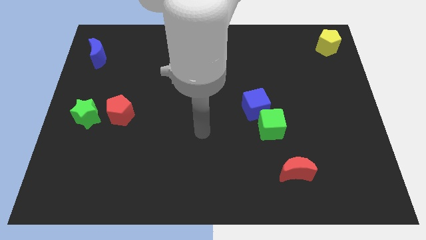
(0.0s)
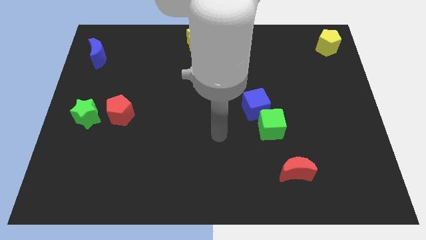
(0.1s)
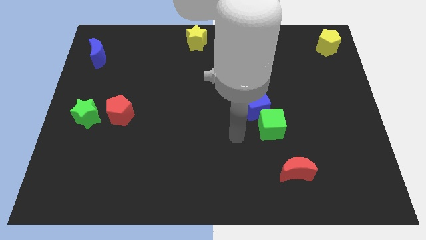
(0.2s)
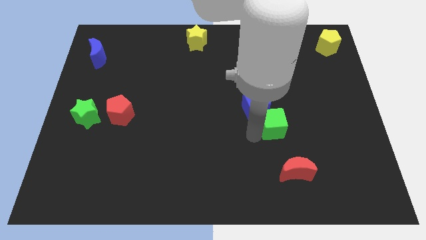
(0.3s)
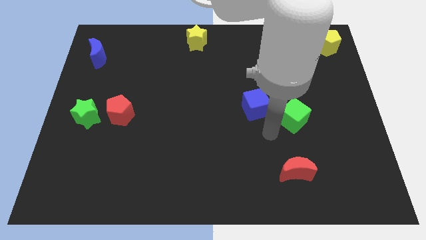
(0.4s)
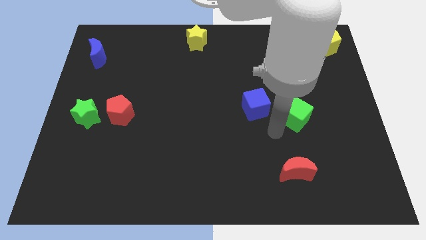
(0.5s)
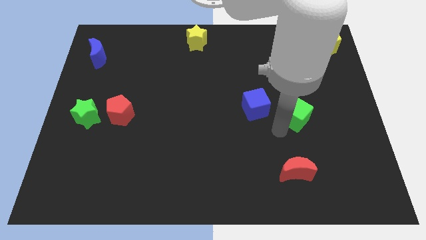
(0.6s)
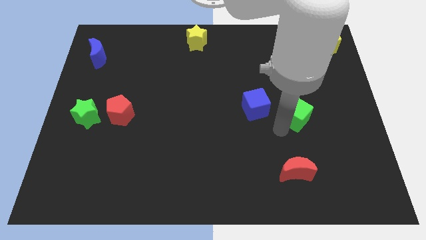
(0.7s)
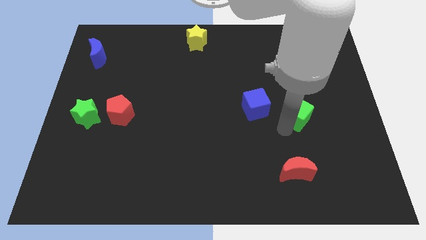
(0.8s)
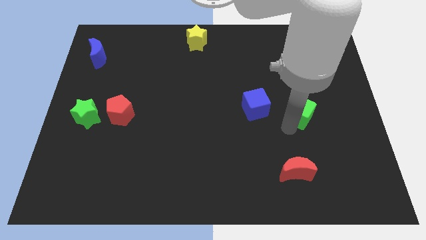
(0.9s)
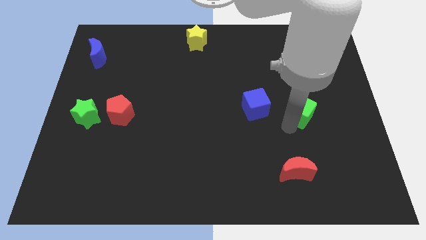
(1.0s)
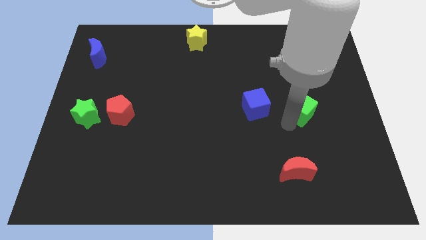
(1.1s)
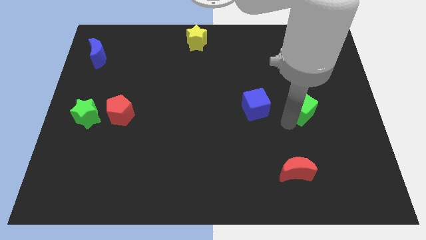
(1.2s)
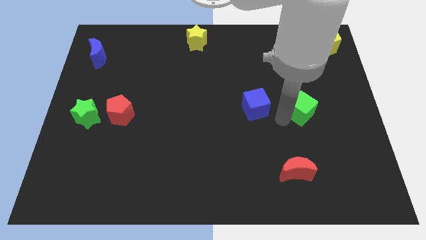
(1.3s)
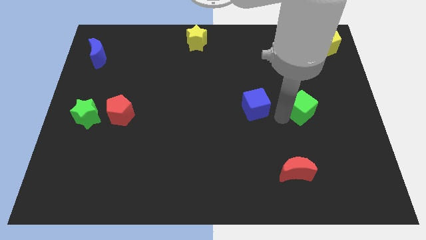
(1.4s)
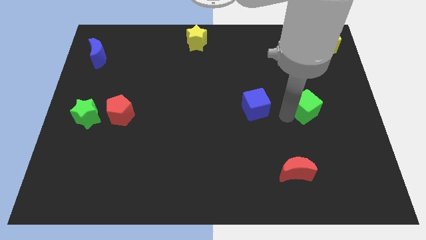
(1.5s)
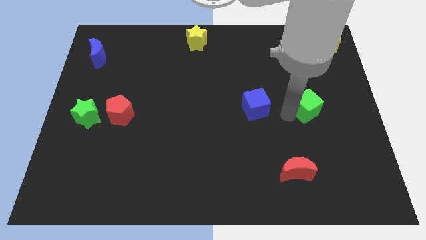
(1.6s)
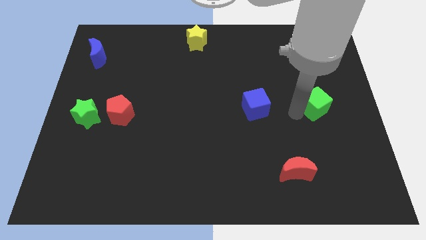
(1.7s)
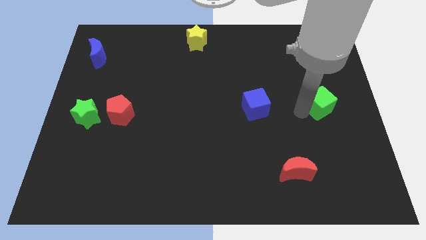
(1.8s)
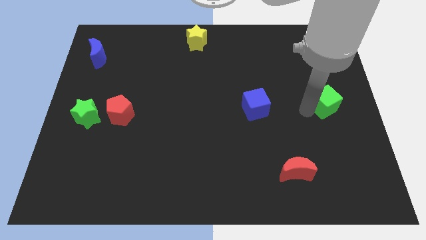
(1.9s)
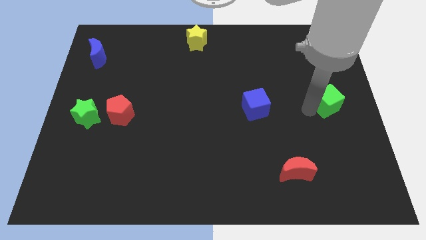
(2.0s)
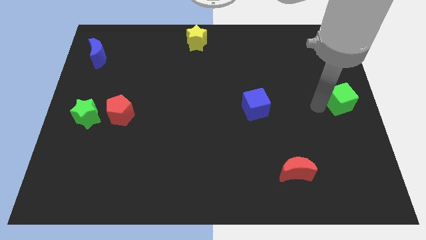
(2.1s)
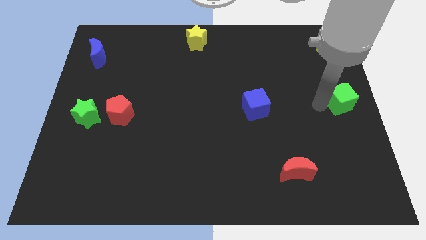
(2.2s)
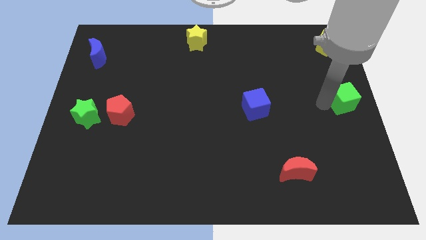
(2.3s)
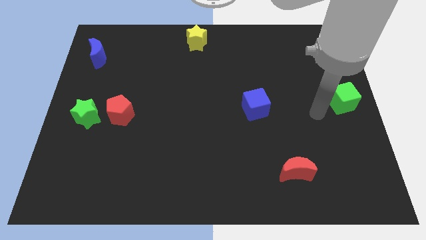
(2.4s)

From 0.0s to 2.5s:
place the green cube to the center right side of the board

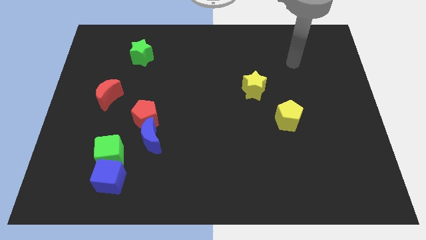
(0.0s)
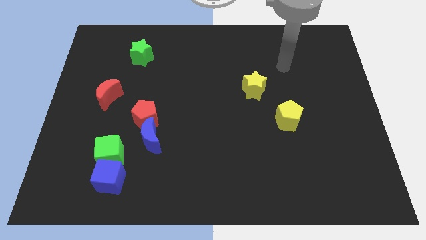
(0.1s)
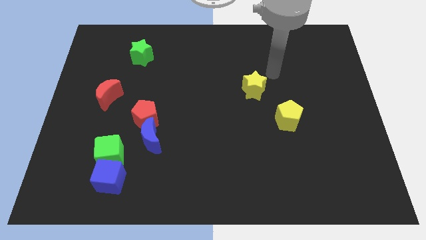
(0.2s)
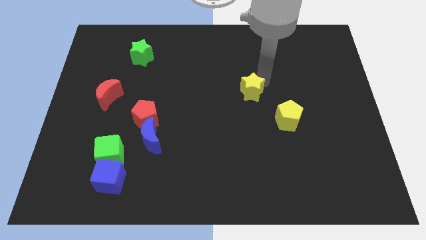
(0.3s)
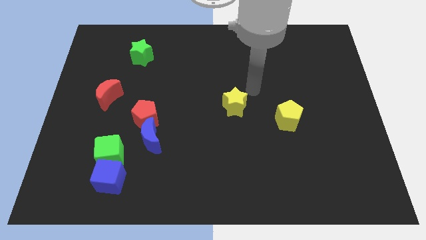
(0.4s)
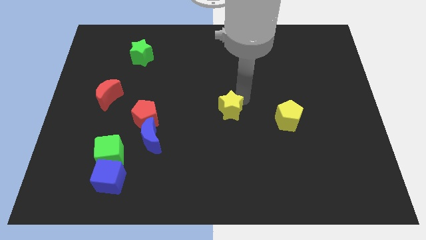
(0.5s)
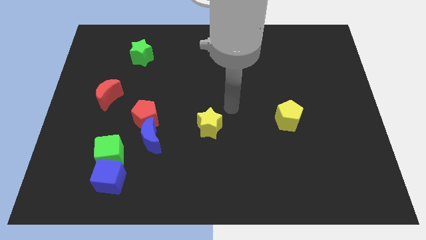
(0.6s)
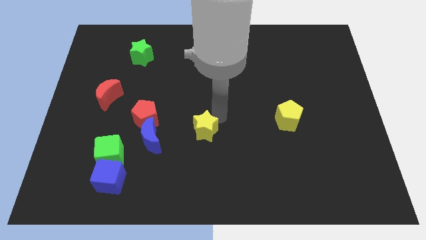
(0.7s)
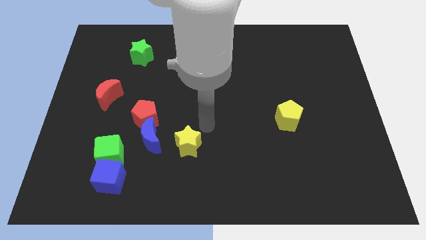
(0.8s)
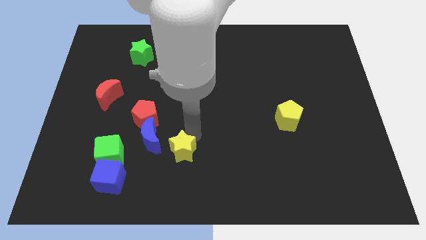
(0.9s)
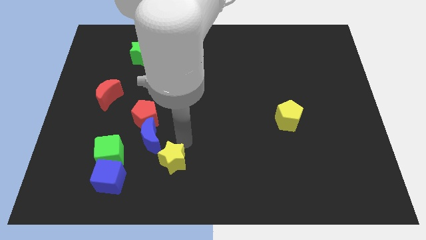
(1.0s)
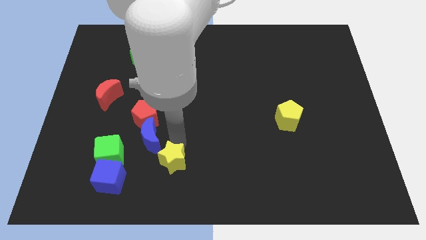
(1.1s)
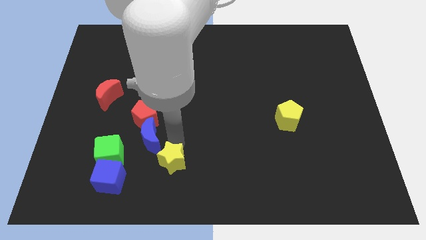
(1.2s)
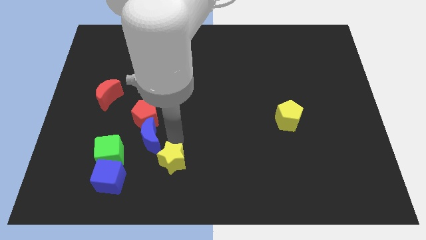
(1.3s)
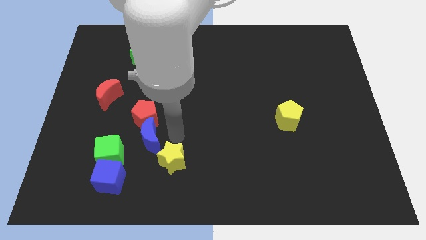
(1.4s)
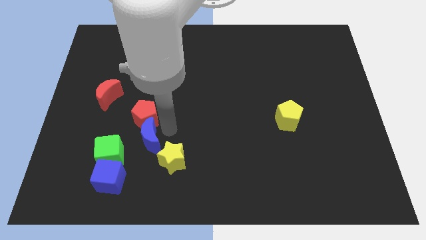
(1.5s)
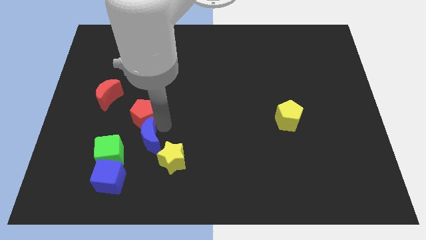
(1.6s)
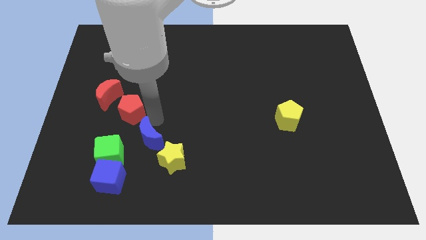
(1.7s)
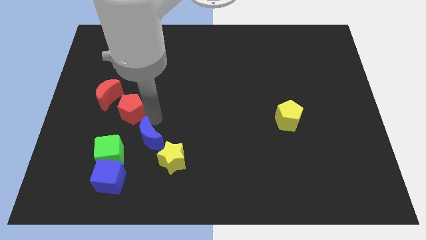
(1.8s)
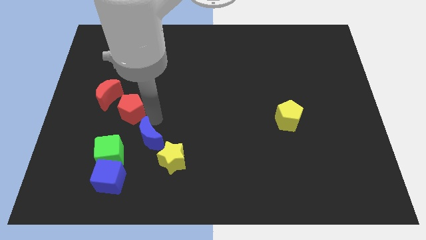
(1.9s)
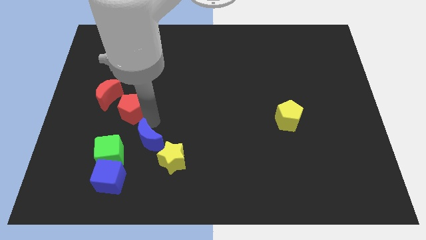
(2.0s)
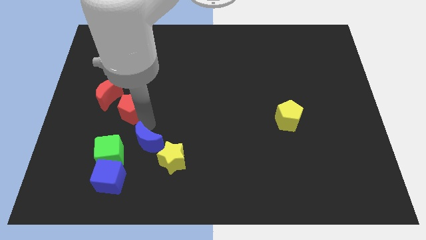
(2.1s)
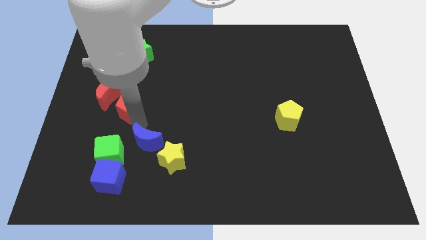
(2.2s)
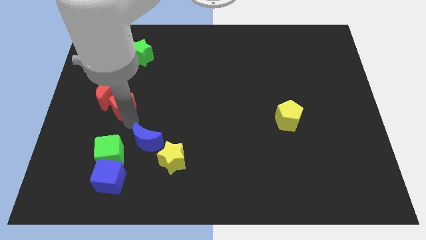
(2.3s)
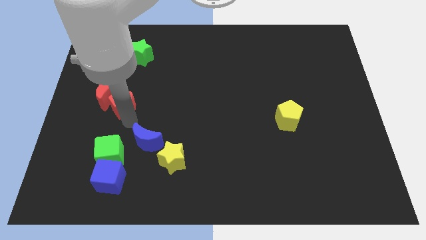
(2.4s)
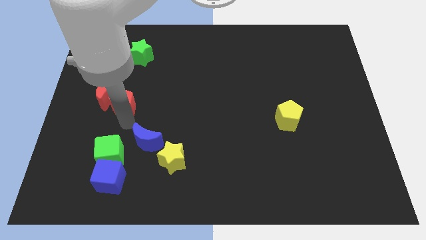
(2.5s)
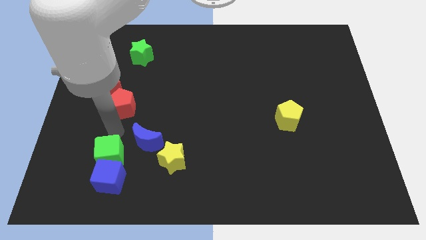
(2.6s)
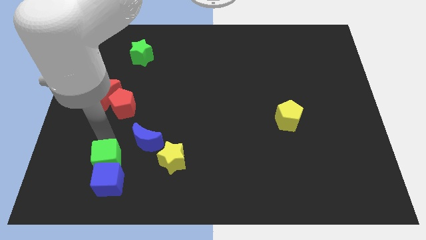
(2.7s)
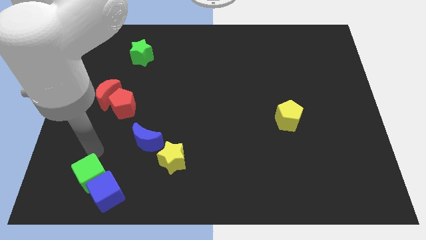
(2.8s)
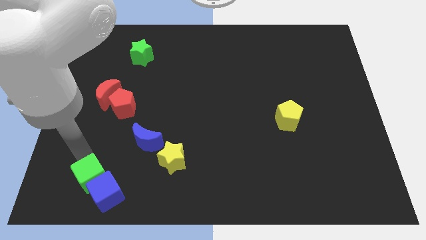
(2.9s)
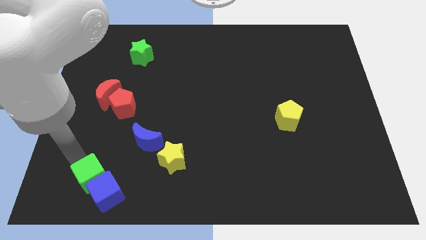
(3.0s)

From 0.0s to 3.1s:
push the yellow star to form a diagonal line with blue crescent and the red blocks

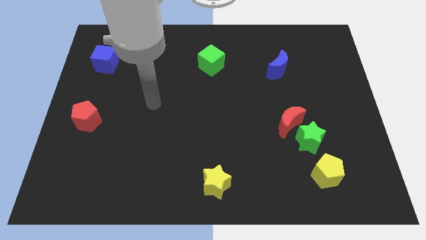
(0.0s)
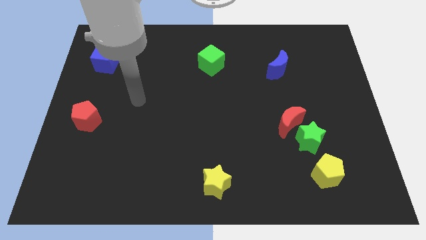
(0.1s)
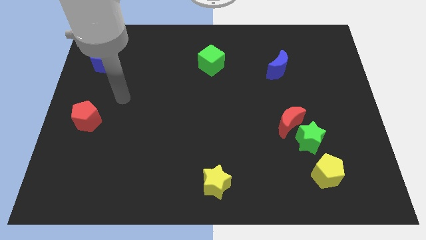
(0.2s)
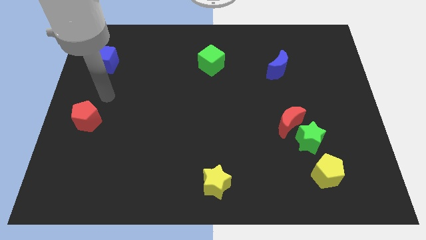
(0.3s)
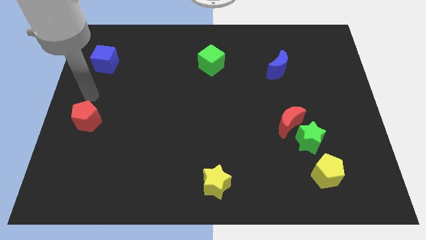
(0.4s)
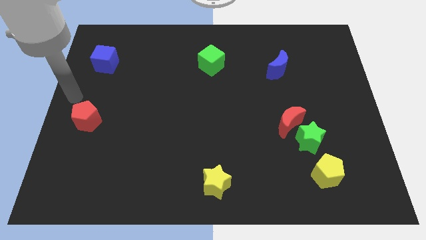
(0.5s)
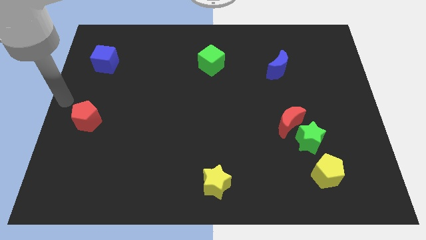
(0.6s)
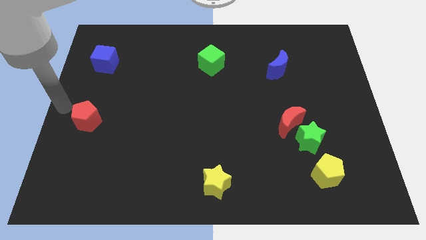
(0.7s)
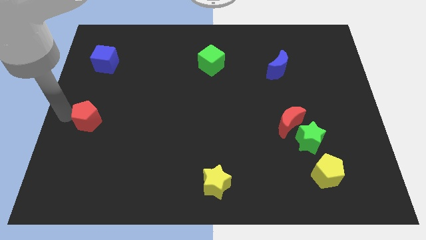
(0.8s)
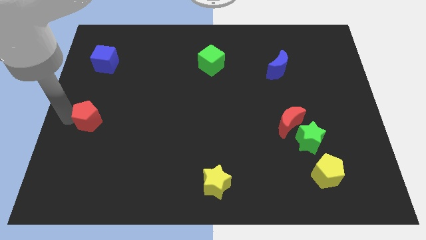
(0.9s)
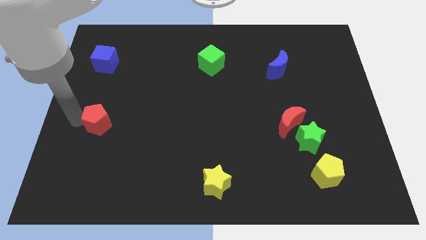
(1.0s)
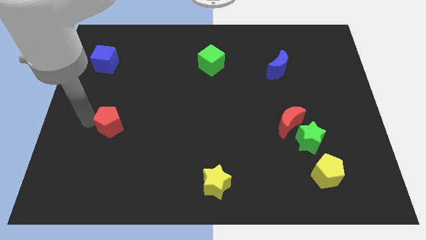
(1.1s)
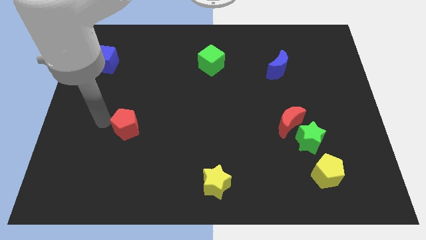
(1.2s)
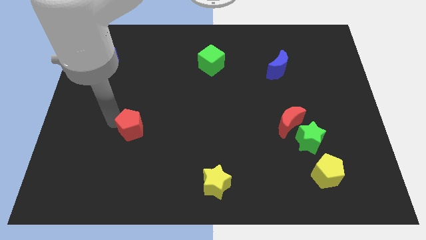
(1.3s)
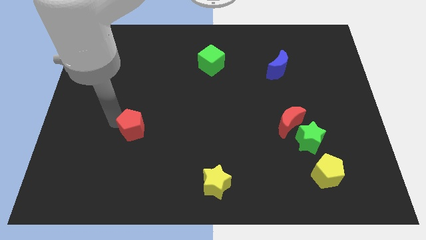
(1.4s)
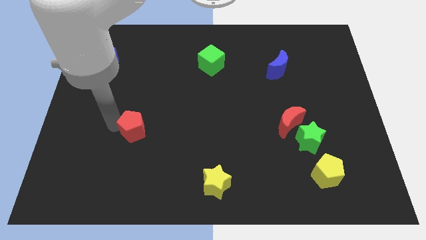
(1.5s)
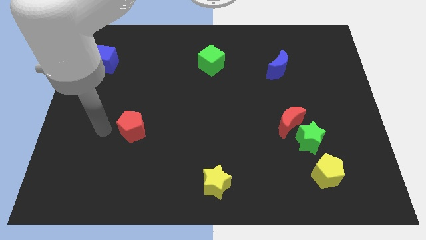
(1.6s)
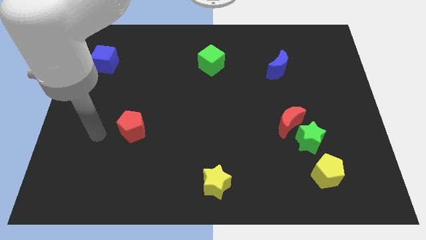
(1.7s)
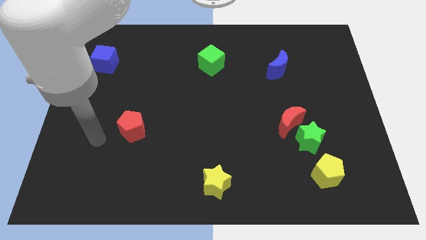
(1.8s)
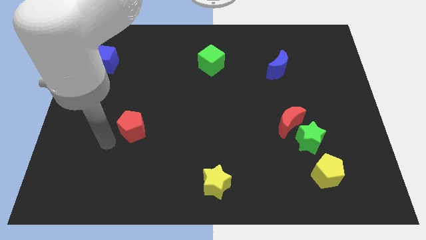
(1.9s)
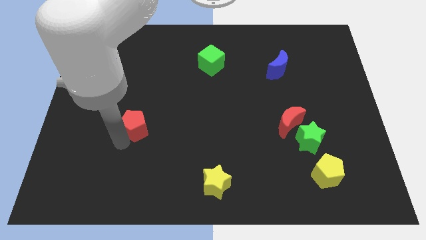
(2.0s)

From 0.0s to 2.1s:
move the red pentagon slightly to the right

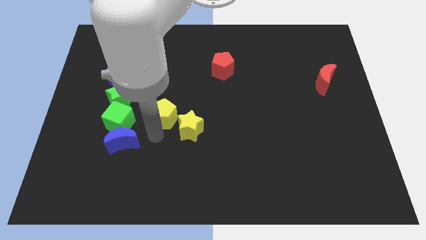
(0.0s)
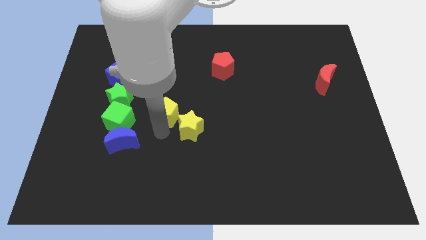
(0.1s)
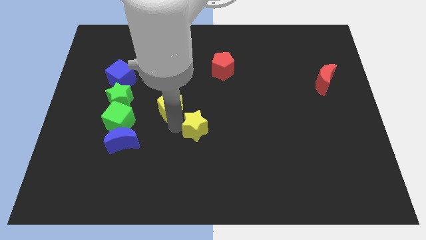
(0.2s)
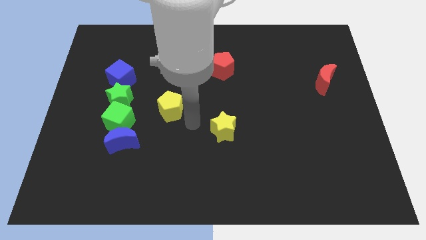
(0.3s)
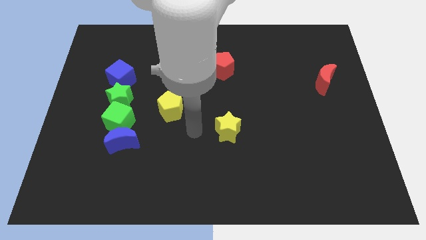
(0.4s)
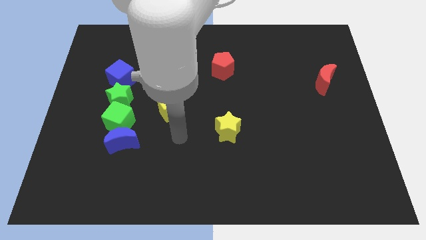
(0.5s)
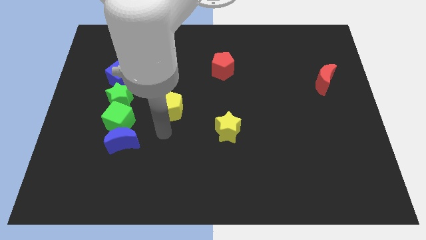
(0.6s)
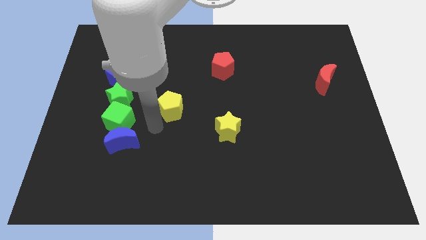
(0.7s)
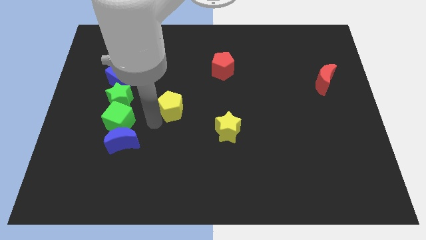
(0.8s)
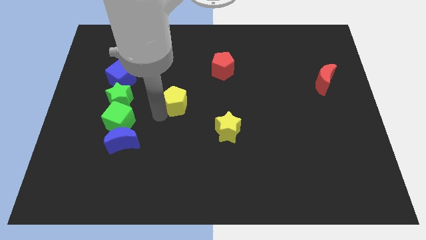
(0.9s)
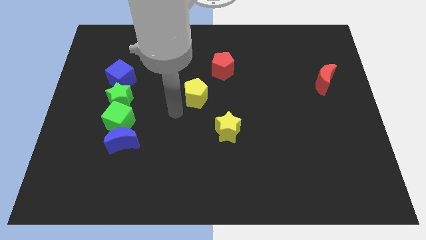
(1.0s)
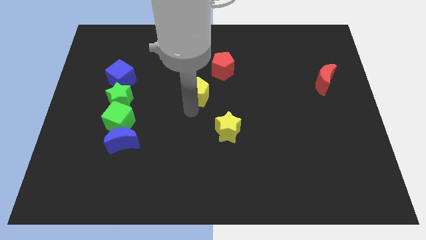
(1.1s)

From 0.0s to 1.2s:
separate the yellow star and yellow pentagon from each other
